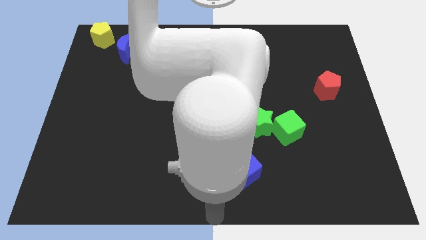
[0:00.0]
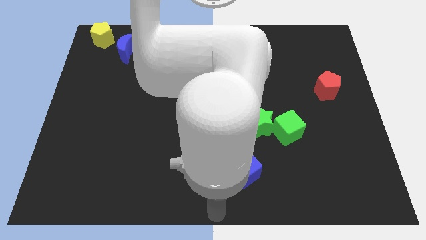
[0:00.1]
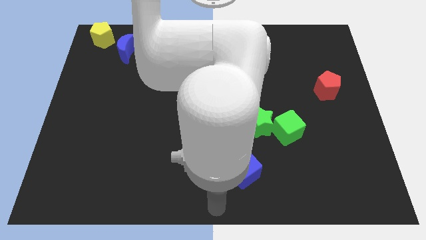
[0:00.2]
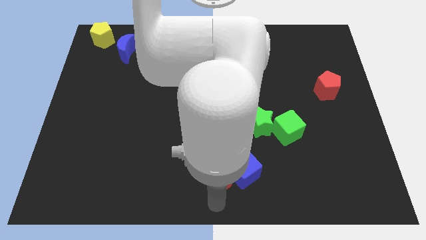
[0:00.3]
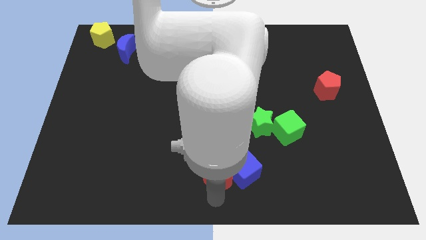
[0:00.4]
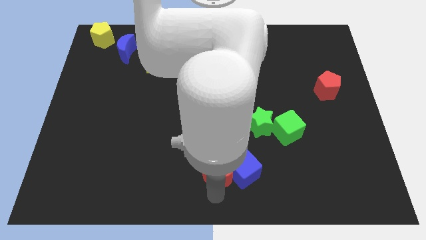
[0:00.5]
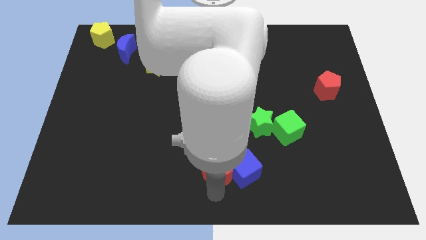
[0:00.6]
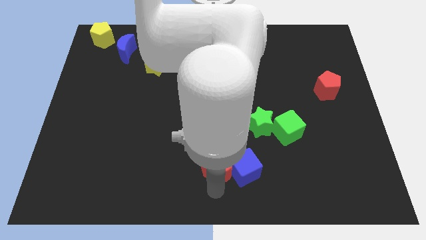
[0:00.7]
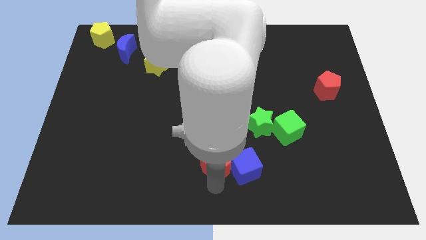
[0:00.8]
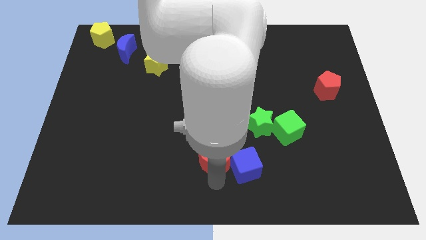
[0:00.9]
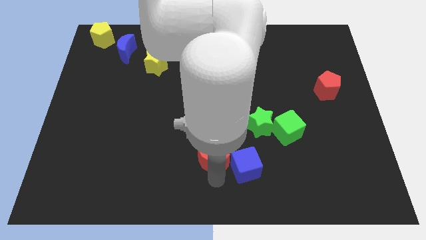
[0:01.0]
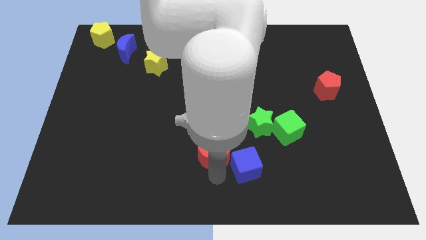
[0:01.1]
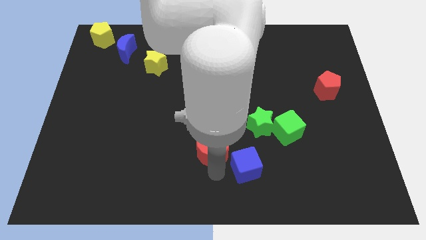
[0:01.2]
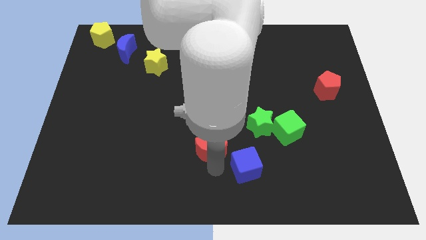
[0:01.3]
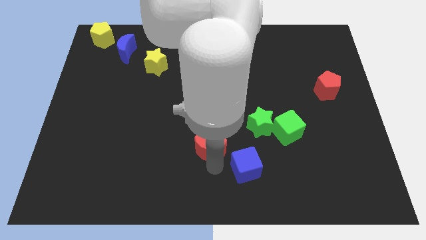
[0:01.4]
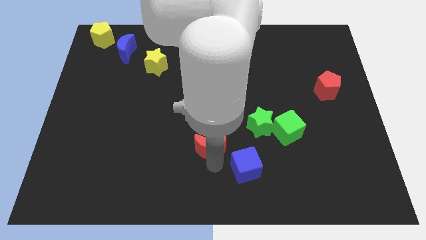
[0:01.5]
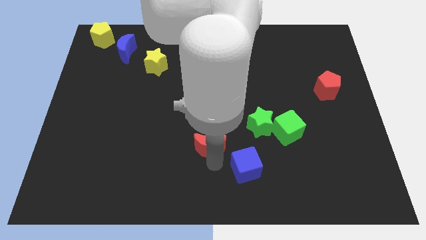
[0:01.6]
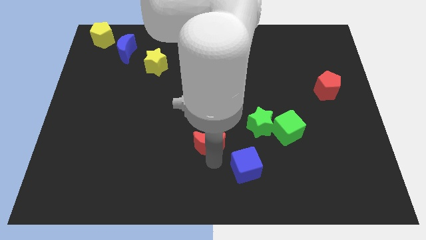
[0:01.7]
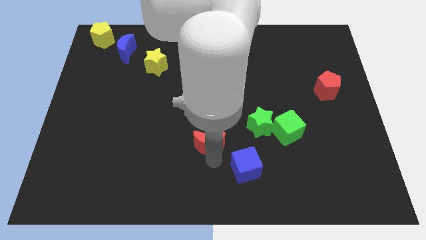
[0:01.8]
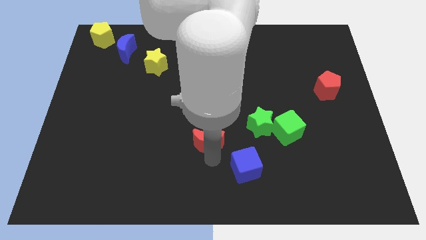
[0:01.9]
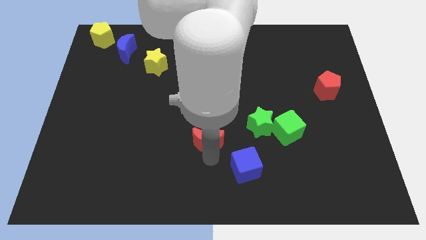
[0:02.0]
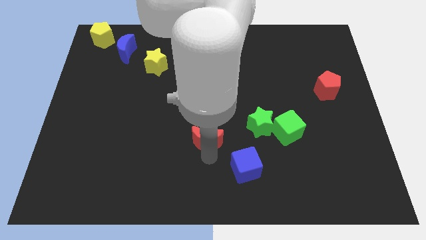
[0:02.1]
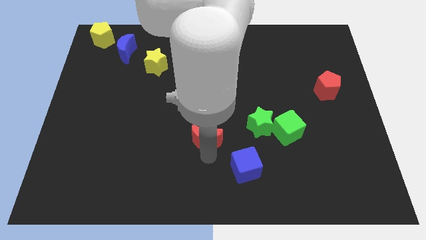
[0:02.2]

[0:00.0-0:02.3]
separate the red crescent from the blue cube

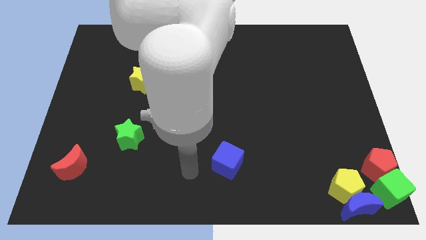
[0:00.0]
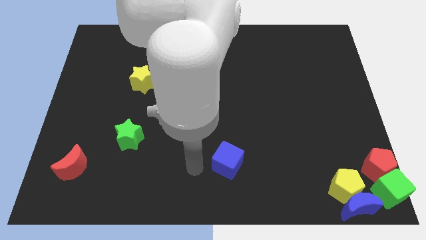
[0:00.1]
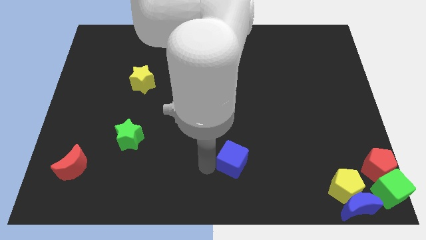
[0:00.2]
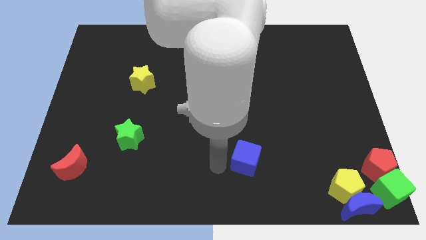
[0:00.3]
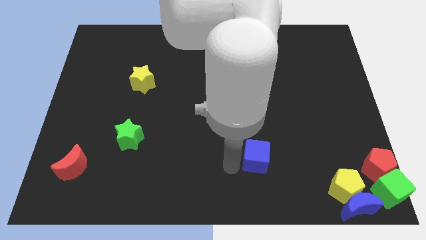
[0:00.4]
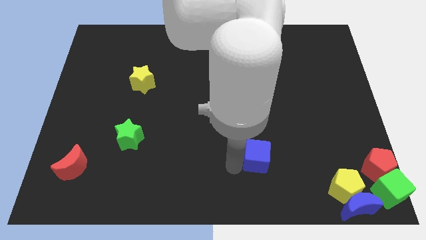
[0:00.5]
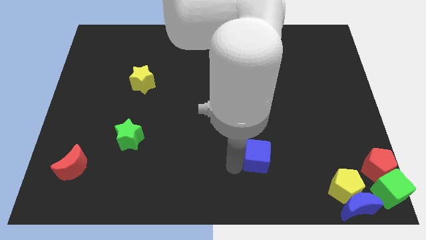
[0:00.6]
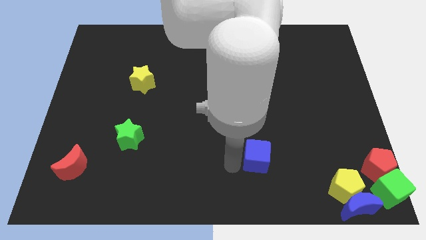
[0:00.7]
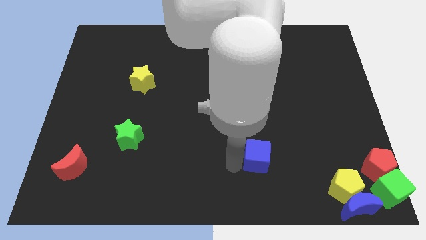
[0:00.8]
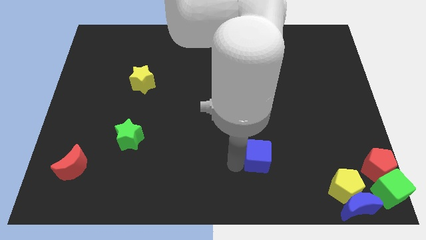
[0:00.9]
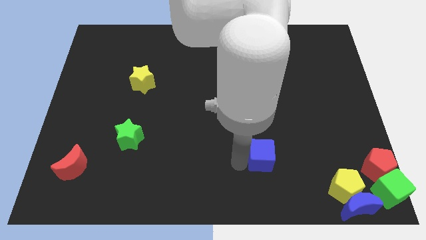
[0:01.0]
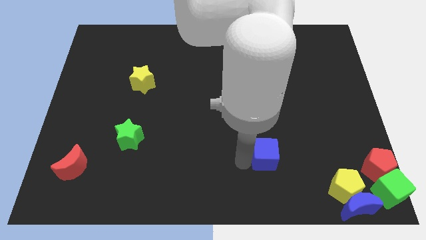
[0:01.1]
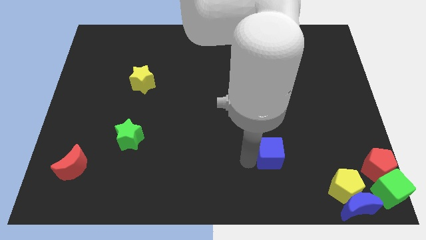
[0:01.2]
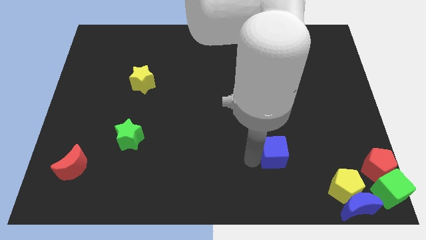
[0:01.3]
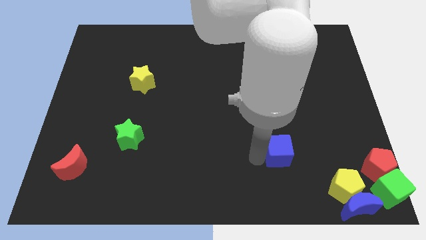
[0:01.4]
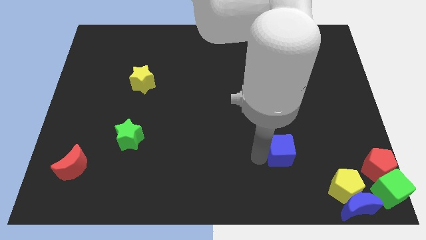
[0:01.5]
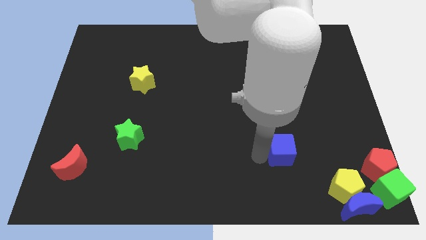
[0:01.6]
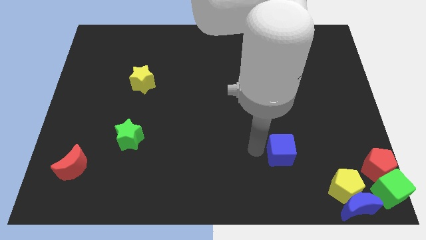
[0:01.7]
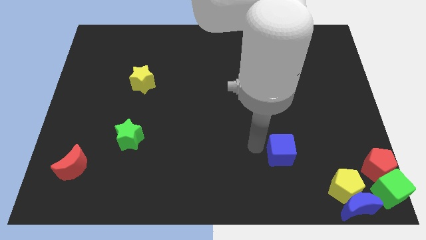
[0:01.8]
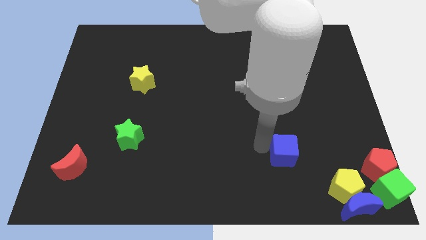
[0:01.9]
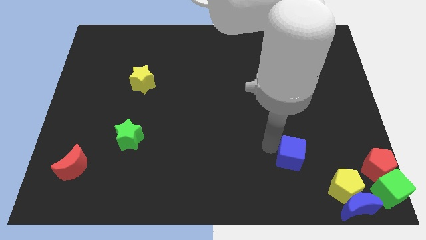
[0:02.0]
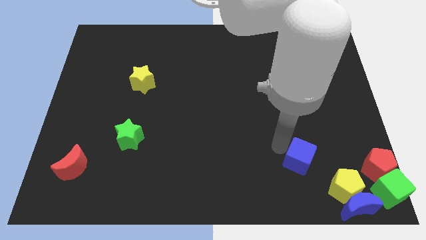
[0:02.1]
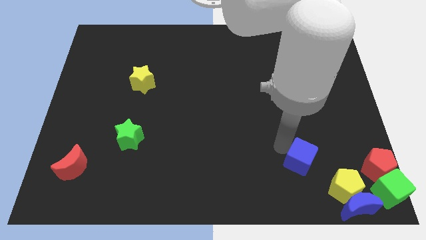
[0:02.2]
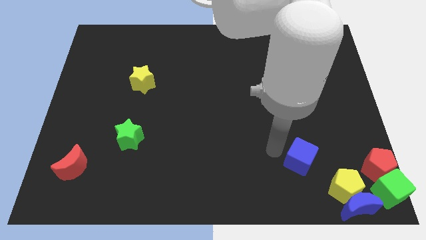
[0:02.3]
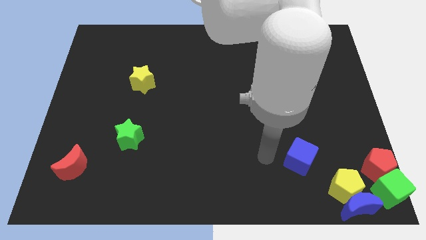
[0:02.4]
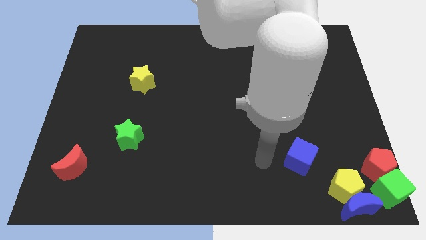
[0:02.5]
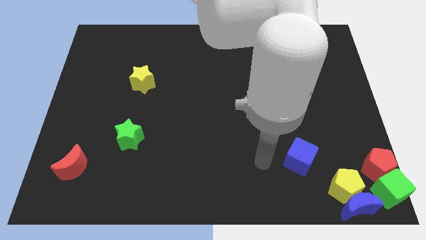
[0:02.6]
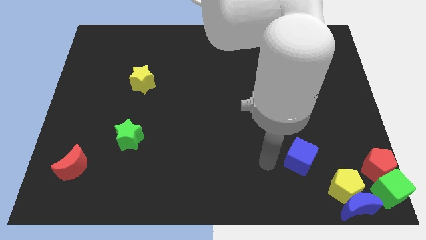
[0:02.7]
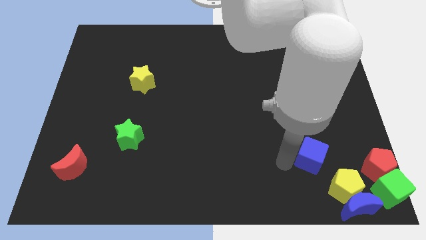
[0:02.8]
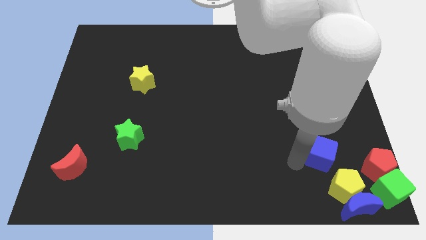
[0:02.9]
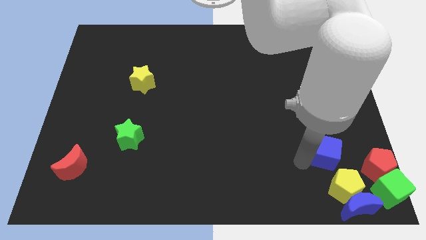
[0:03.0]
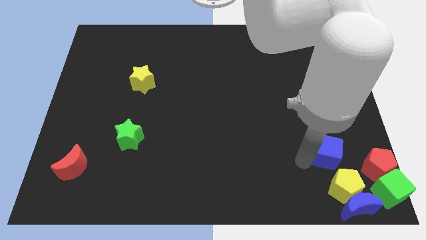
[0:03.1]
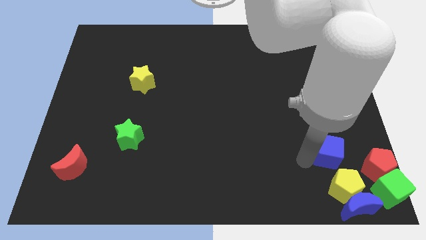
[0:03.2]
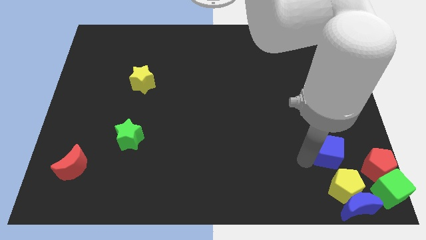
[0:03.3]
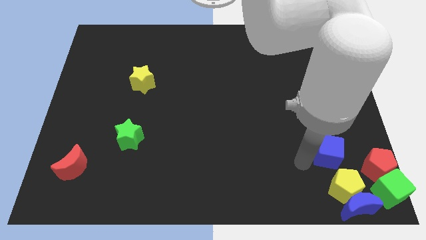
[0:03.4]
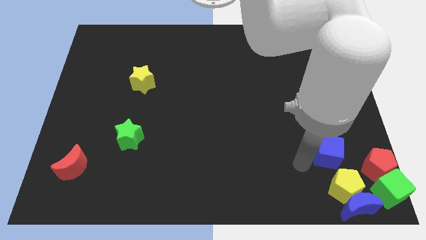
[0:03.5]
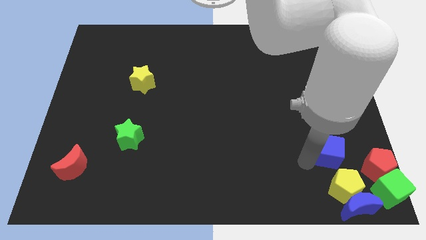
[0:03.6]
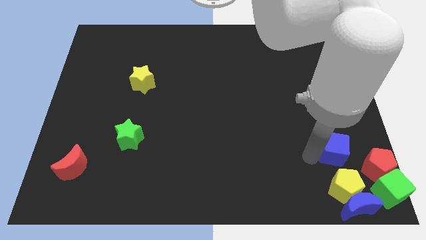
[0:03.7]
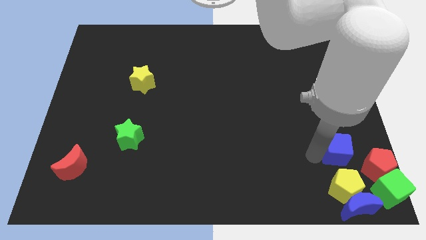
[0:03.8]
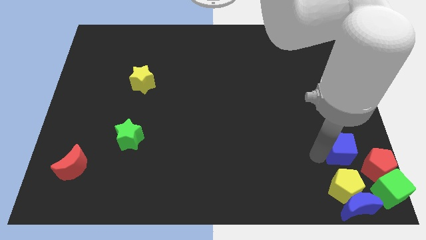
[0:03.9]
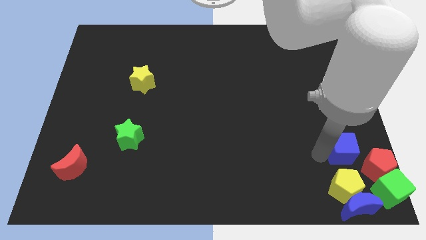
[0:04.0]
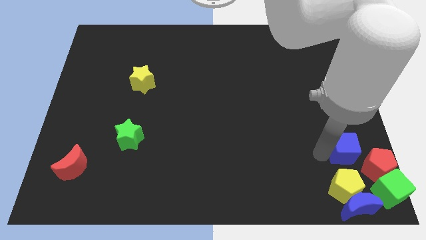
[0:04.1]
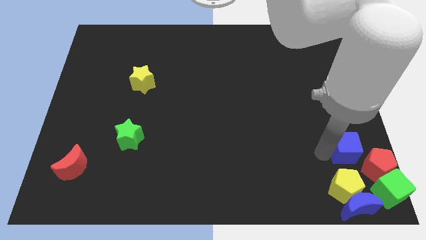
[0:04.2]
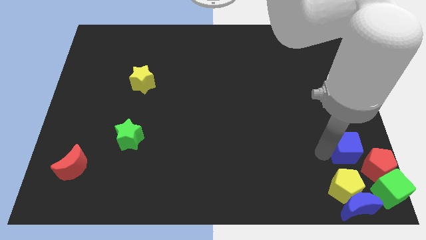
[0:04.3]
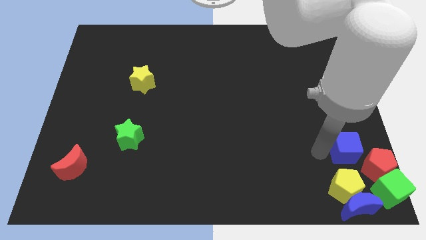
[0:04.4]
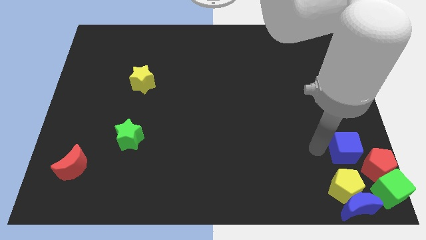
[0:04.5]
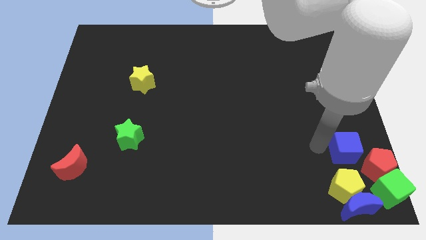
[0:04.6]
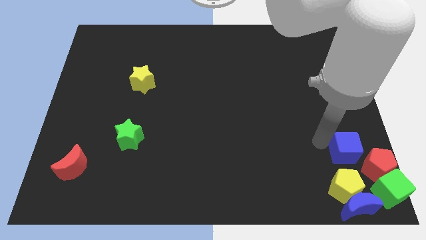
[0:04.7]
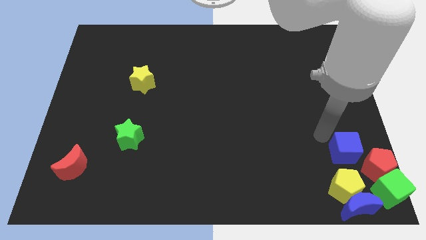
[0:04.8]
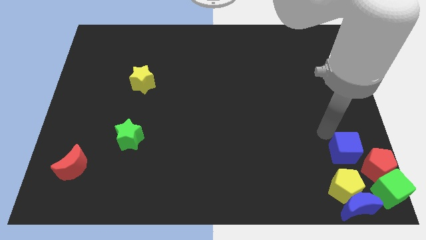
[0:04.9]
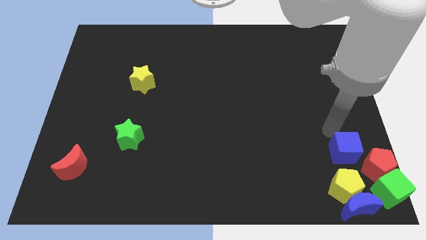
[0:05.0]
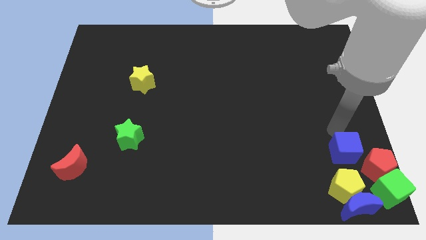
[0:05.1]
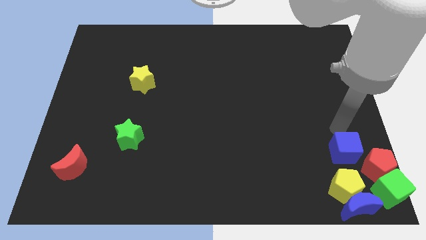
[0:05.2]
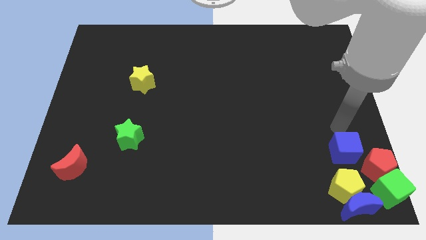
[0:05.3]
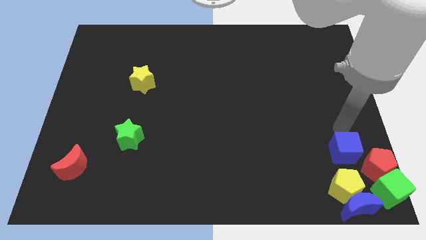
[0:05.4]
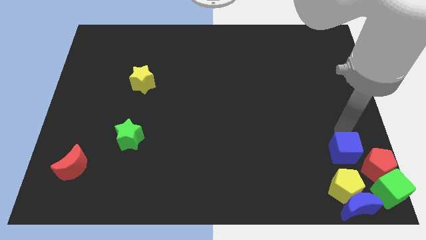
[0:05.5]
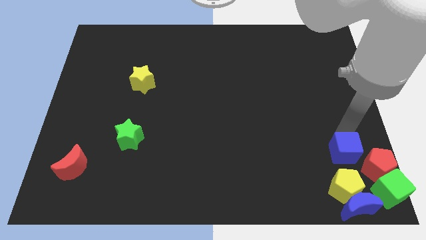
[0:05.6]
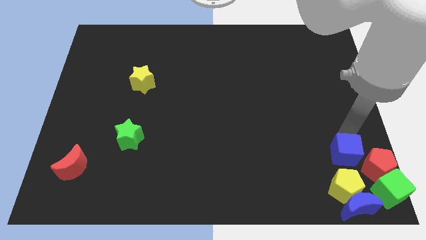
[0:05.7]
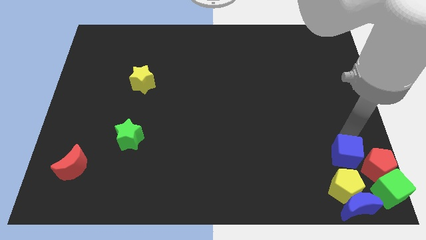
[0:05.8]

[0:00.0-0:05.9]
push the blue cube to the top of the yellow pentagon

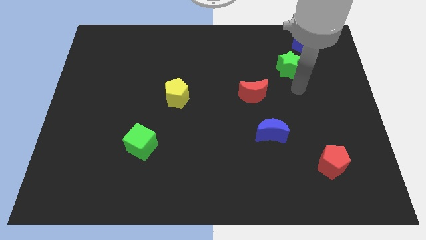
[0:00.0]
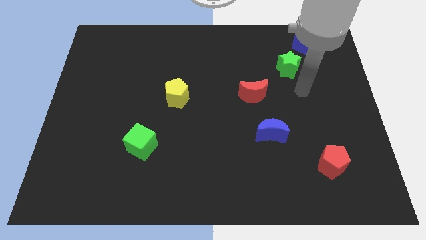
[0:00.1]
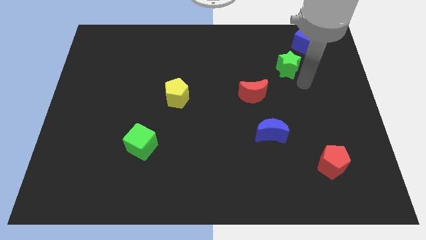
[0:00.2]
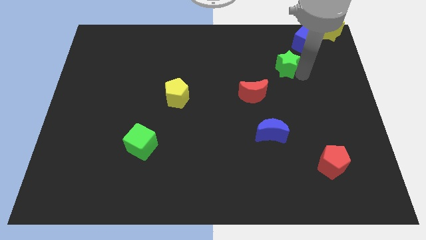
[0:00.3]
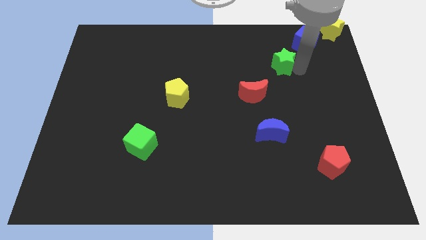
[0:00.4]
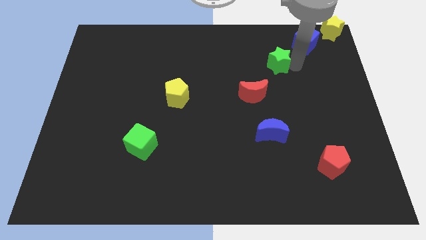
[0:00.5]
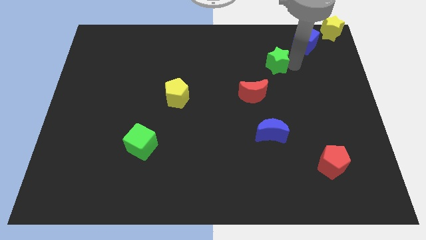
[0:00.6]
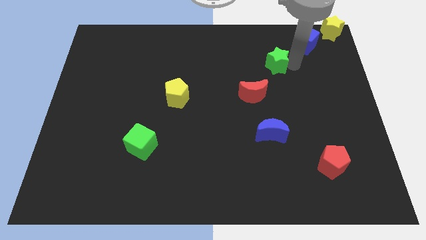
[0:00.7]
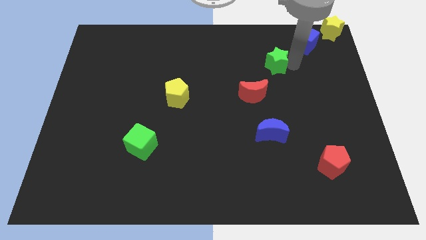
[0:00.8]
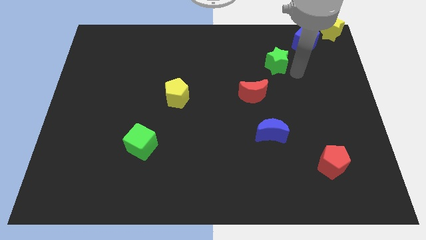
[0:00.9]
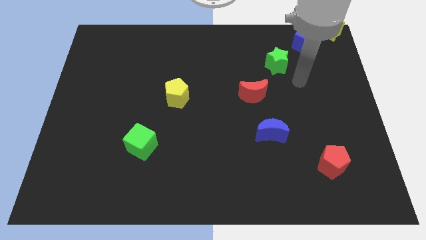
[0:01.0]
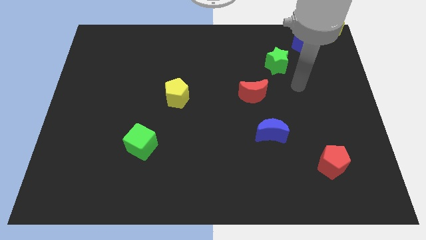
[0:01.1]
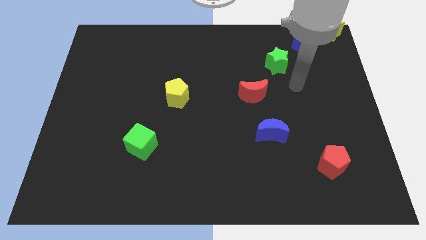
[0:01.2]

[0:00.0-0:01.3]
place the green star diagonally in between the red moon and the blue cube
